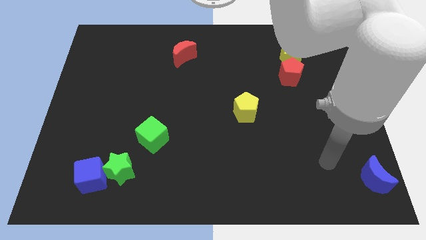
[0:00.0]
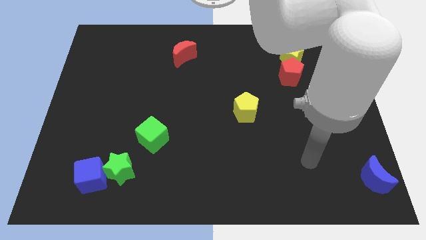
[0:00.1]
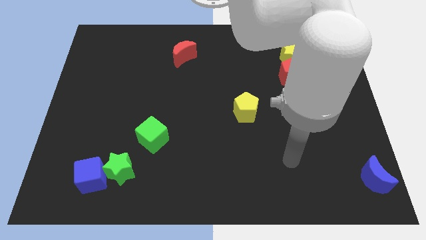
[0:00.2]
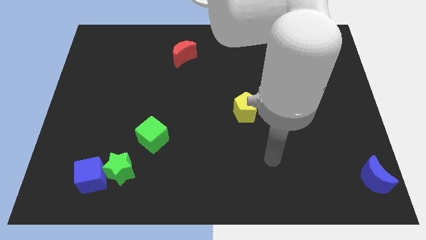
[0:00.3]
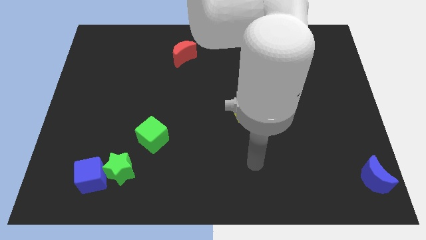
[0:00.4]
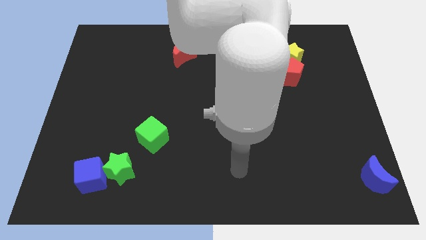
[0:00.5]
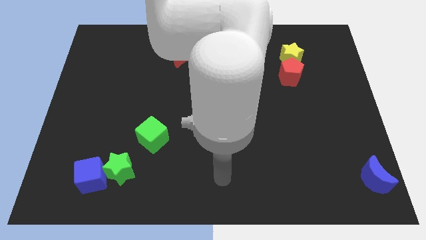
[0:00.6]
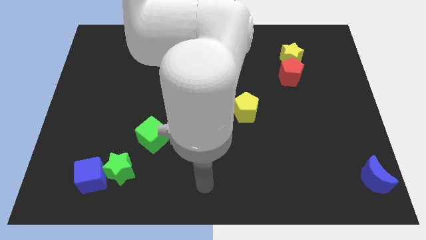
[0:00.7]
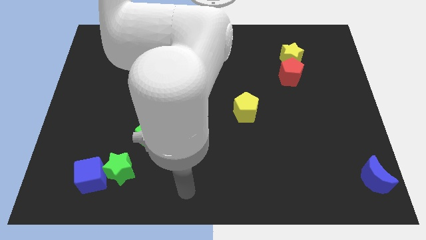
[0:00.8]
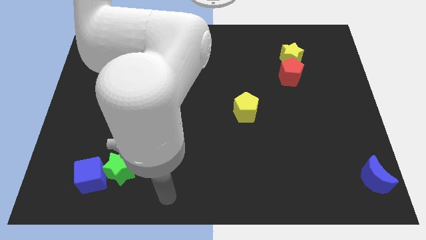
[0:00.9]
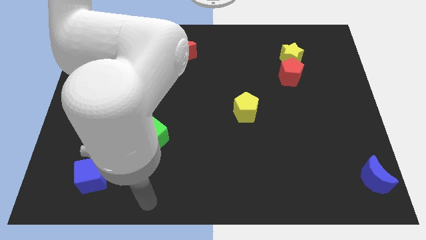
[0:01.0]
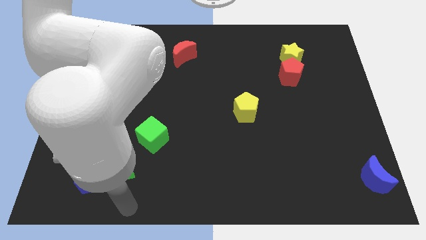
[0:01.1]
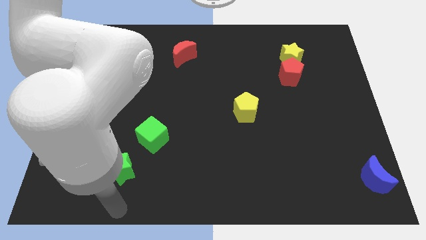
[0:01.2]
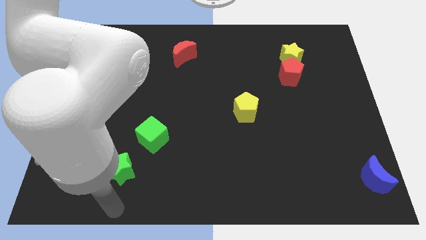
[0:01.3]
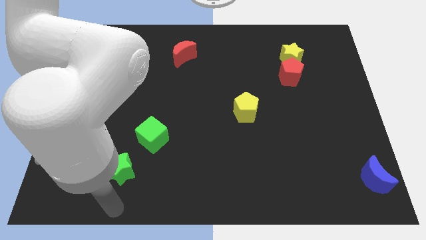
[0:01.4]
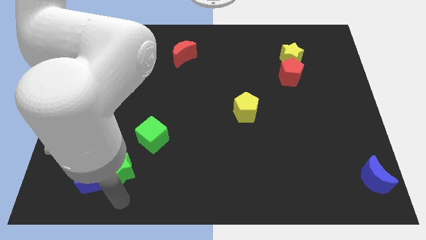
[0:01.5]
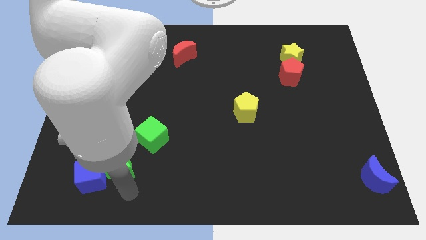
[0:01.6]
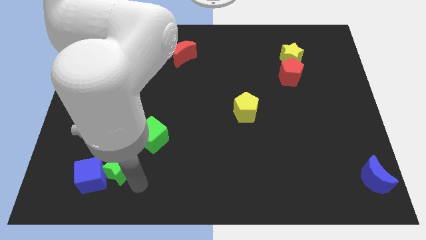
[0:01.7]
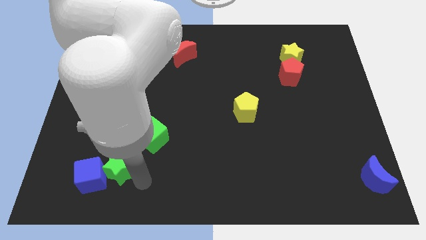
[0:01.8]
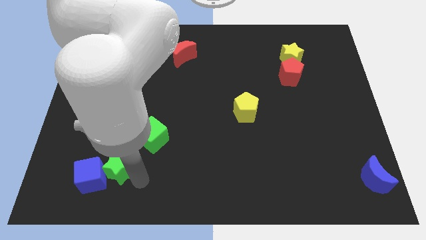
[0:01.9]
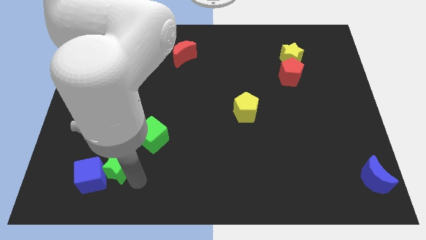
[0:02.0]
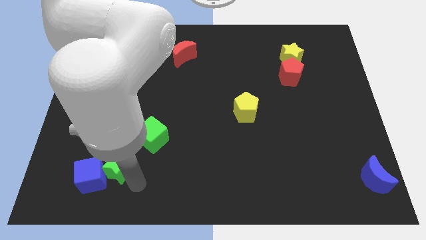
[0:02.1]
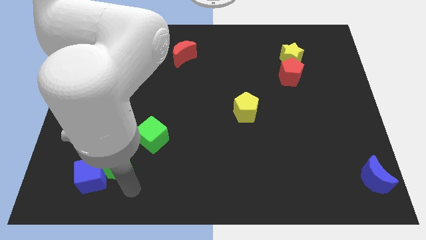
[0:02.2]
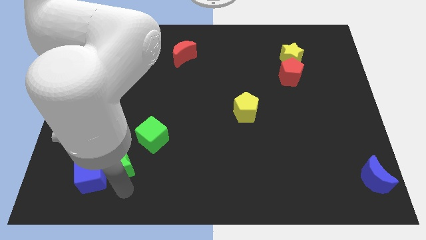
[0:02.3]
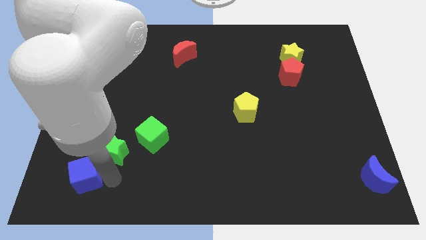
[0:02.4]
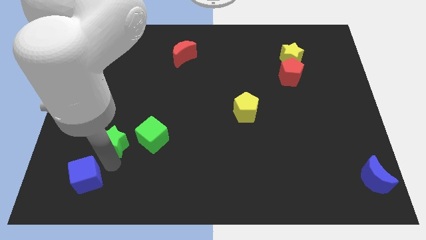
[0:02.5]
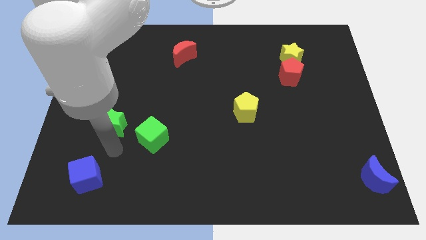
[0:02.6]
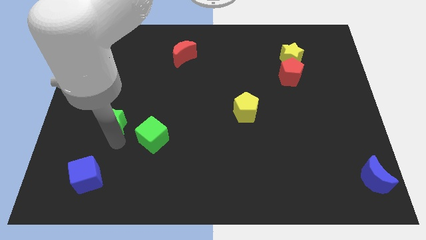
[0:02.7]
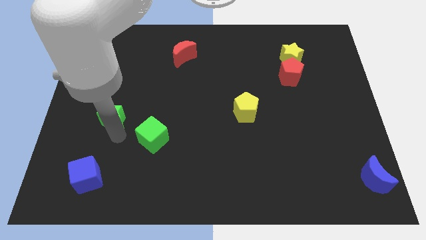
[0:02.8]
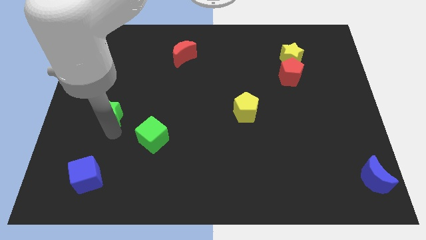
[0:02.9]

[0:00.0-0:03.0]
push the green star slightly upside of the board

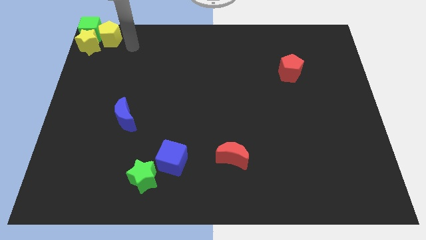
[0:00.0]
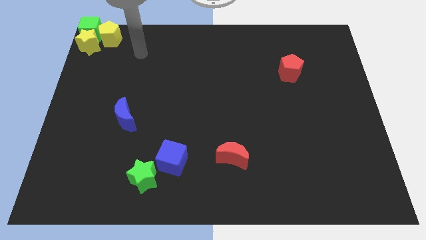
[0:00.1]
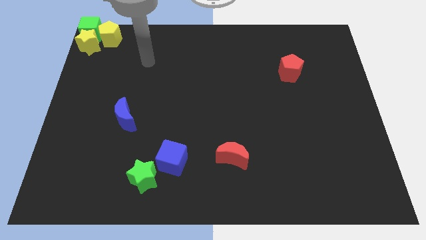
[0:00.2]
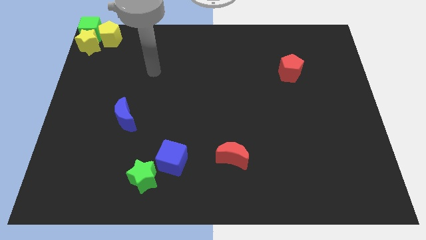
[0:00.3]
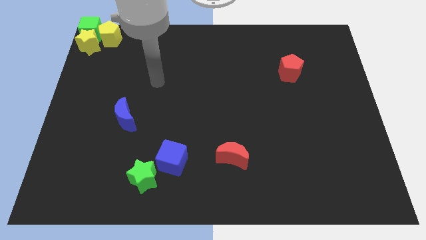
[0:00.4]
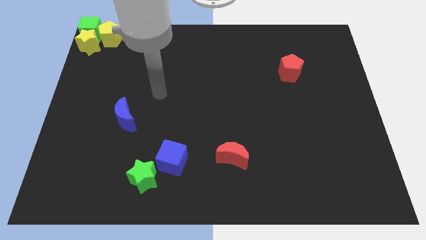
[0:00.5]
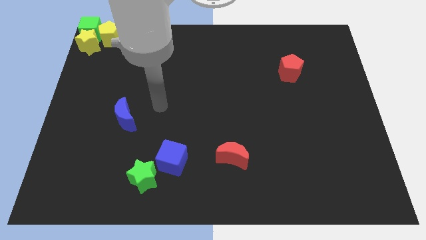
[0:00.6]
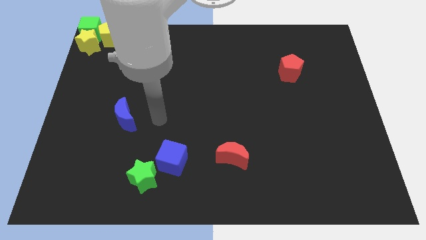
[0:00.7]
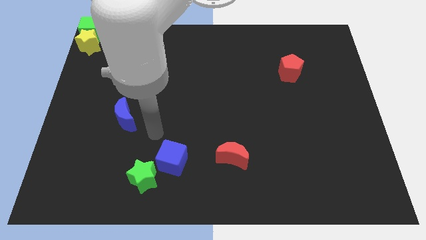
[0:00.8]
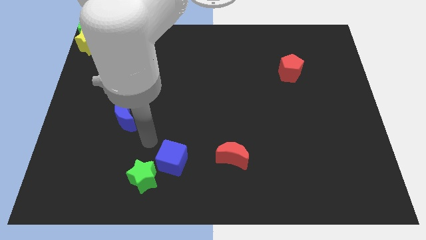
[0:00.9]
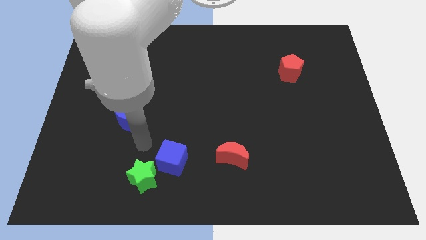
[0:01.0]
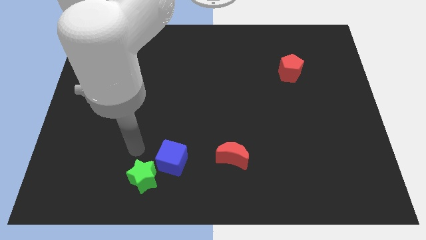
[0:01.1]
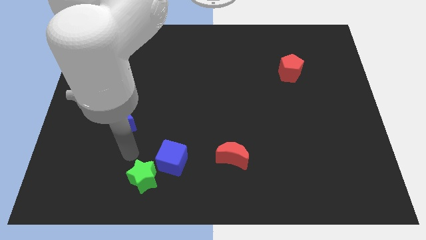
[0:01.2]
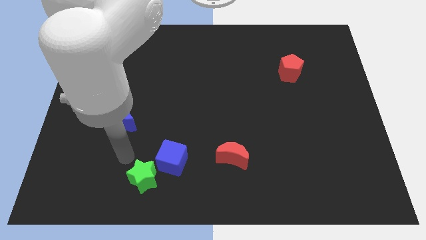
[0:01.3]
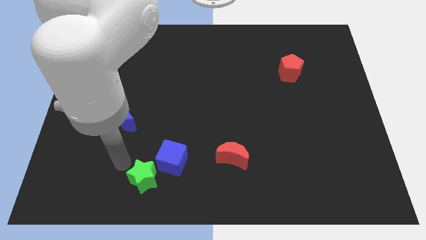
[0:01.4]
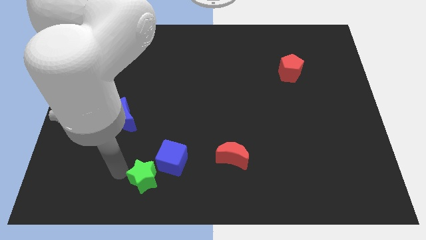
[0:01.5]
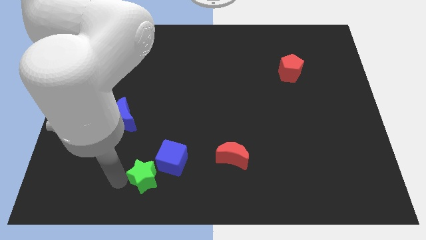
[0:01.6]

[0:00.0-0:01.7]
place your hand to left side of the green star

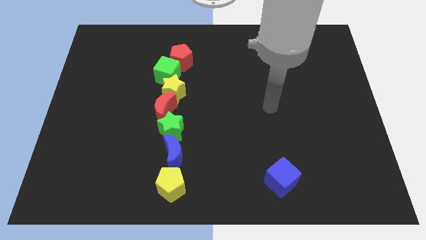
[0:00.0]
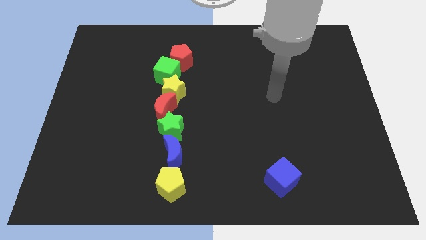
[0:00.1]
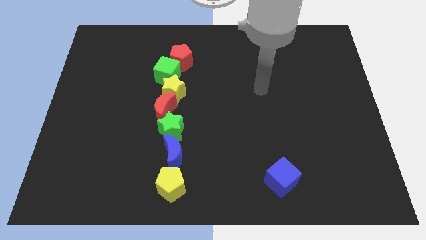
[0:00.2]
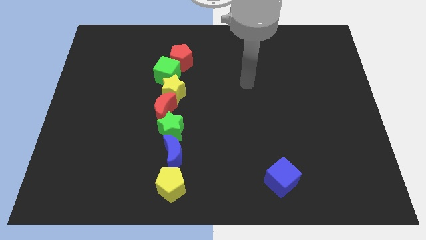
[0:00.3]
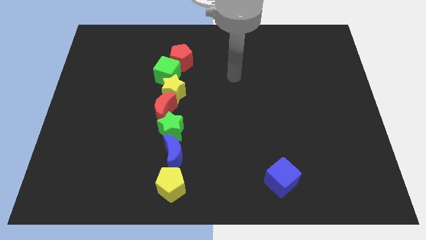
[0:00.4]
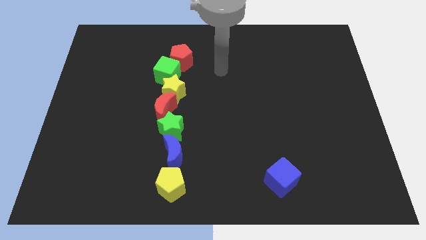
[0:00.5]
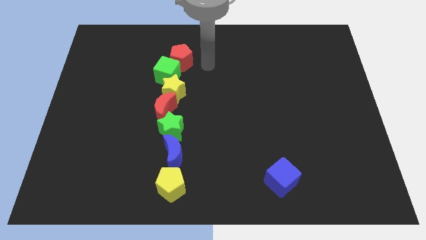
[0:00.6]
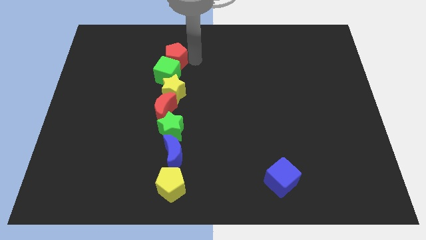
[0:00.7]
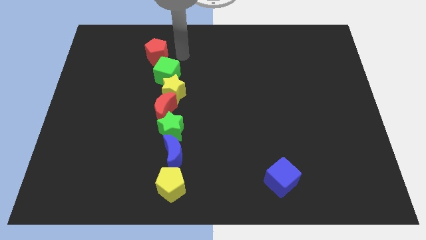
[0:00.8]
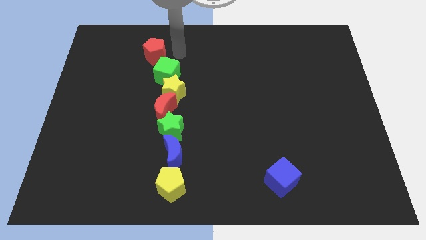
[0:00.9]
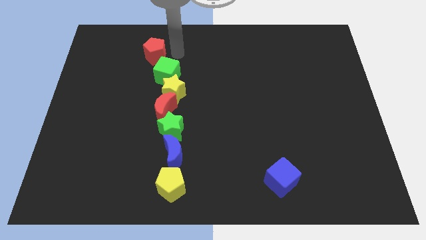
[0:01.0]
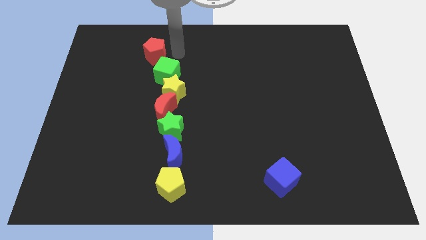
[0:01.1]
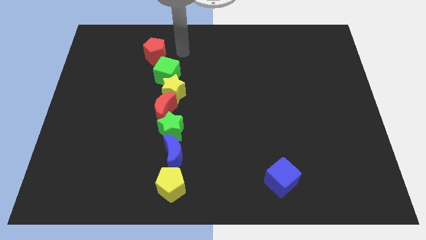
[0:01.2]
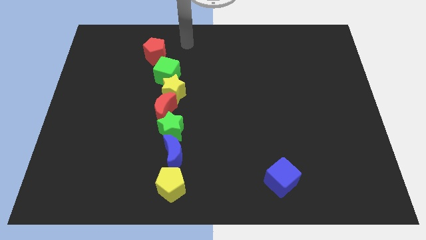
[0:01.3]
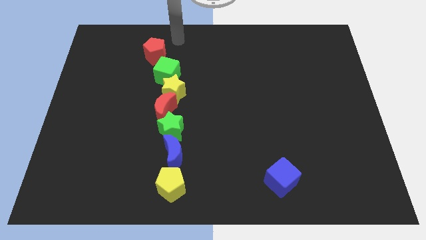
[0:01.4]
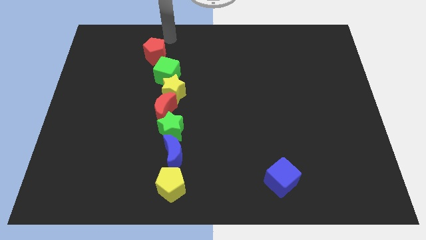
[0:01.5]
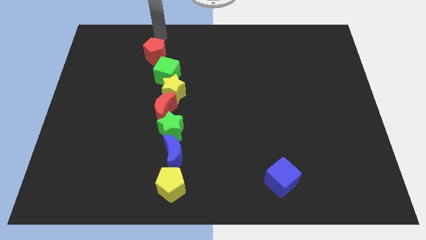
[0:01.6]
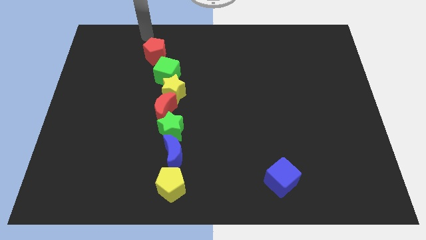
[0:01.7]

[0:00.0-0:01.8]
move the arm to the top of the red pentagon

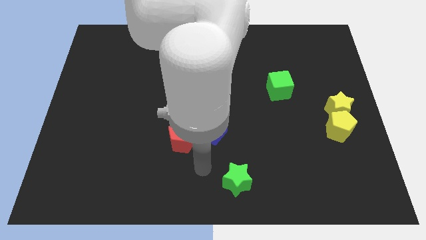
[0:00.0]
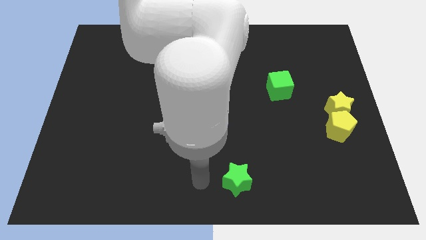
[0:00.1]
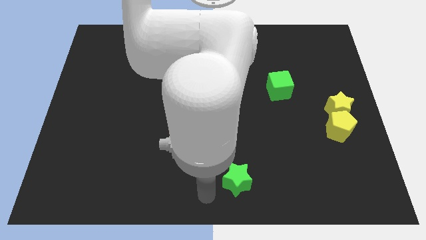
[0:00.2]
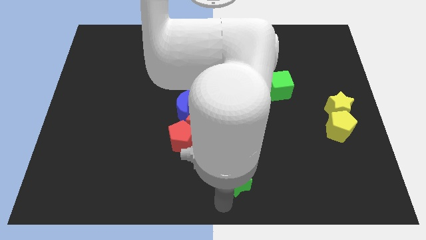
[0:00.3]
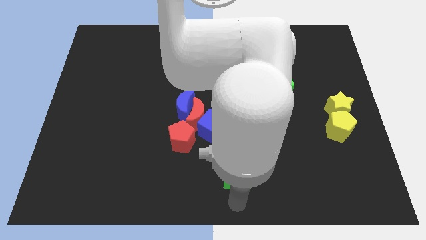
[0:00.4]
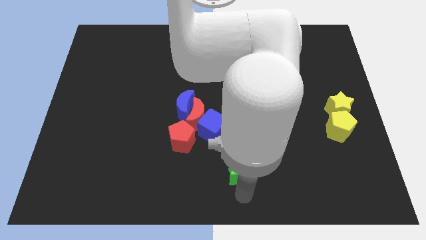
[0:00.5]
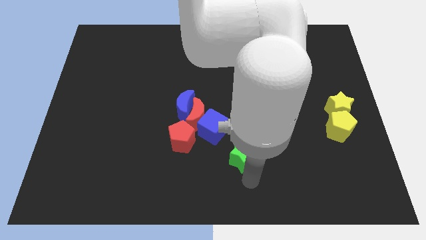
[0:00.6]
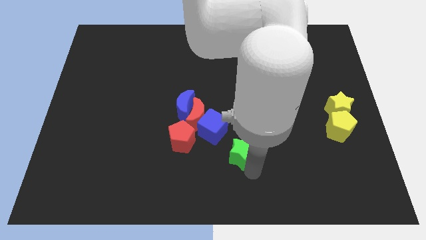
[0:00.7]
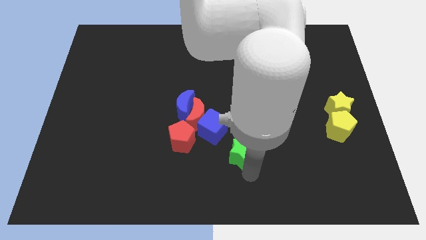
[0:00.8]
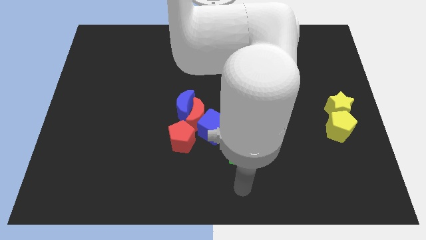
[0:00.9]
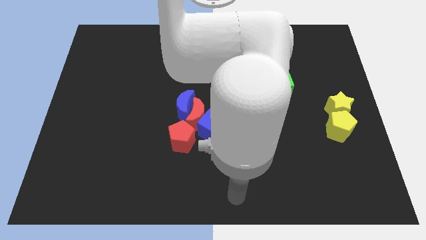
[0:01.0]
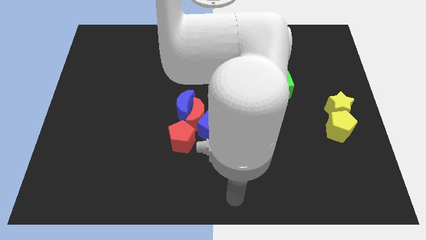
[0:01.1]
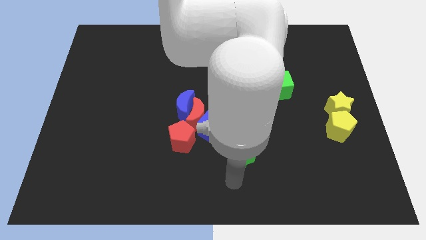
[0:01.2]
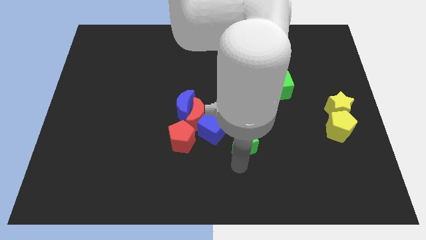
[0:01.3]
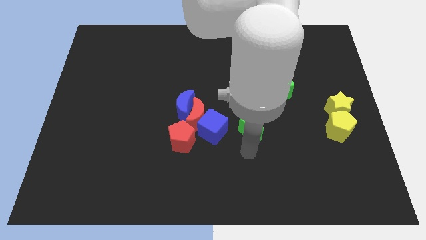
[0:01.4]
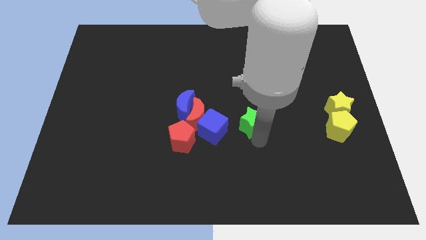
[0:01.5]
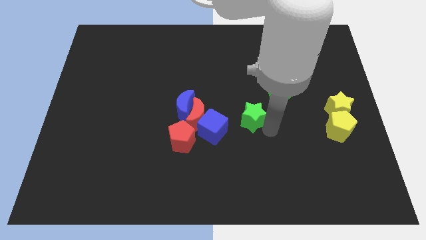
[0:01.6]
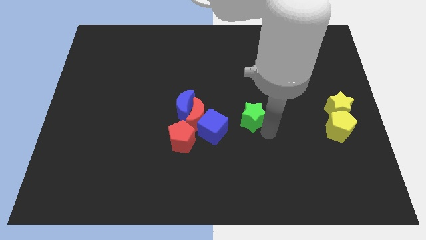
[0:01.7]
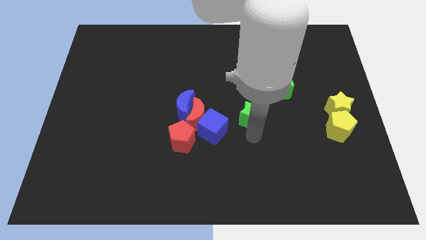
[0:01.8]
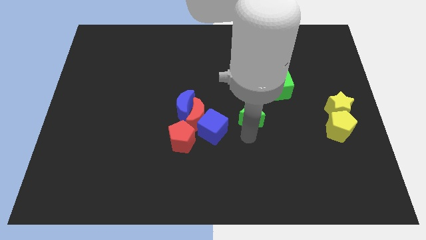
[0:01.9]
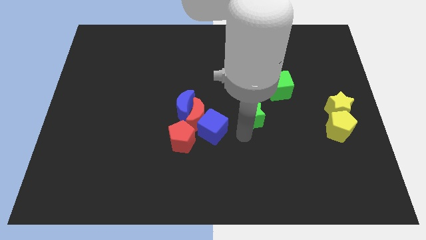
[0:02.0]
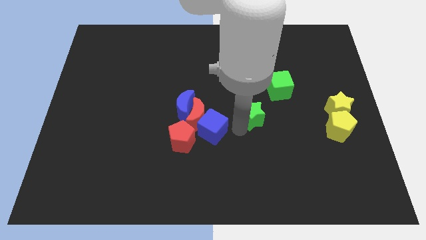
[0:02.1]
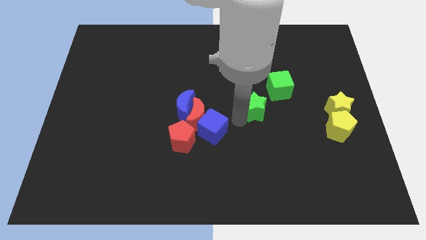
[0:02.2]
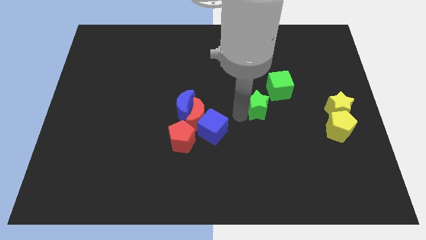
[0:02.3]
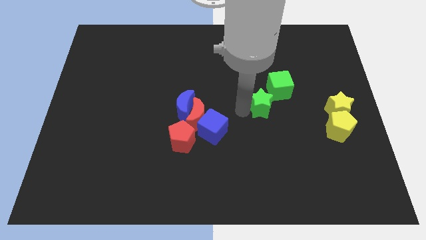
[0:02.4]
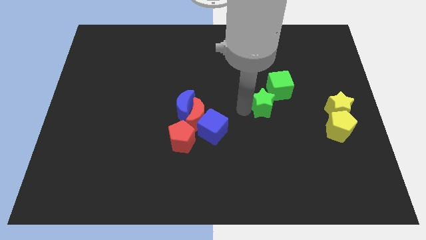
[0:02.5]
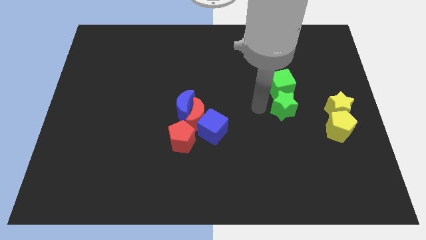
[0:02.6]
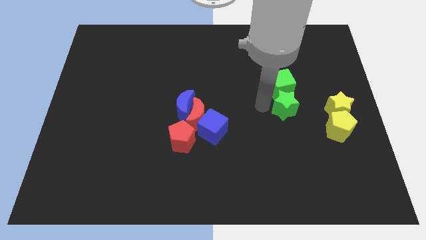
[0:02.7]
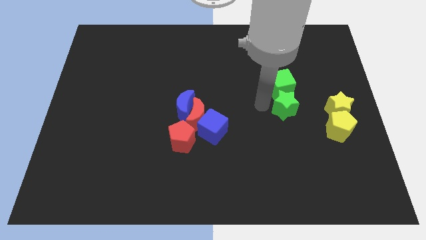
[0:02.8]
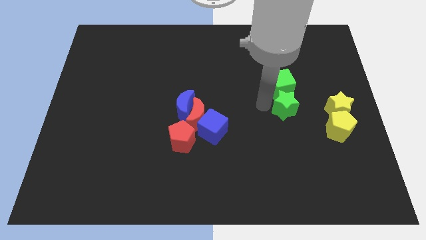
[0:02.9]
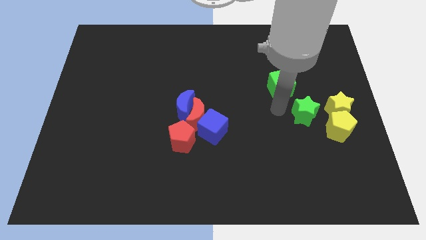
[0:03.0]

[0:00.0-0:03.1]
move the green star towards the left of the yellow star
